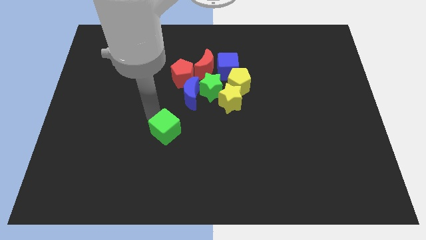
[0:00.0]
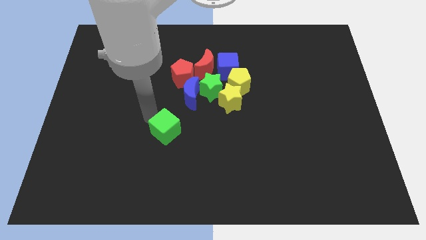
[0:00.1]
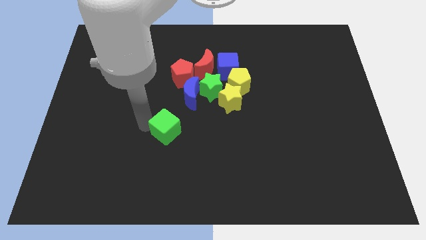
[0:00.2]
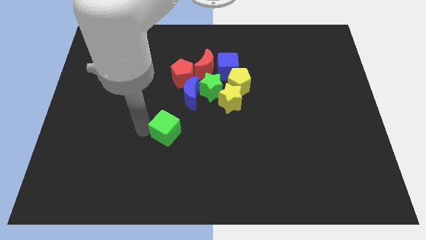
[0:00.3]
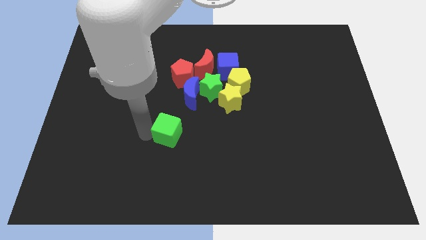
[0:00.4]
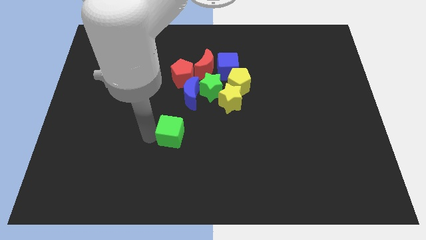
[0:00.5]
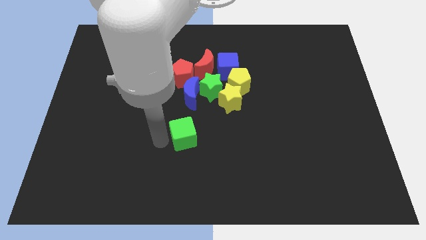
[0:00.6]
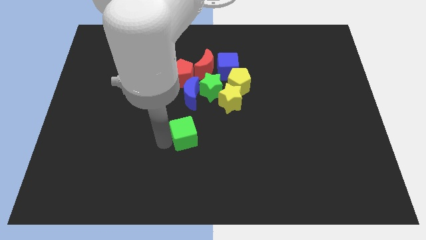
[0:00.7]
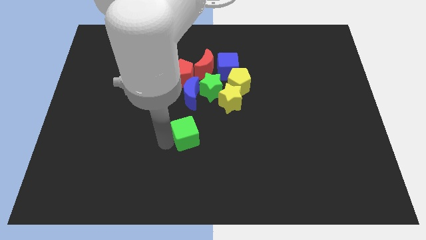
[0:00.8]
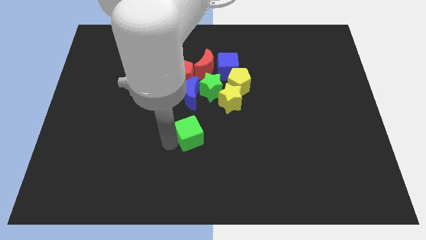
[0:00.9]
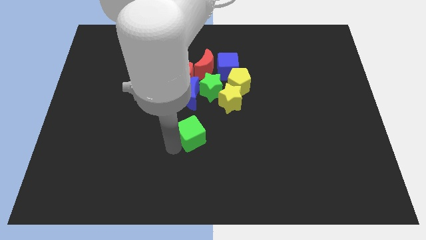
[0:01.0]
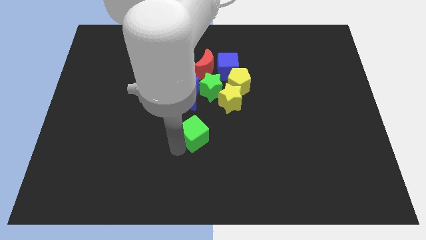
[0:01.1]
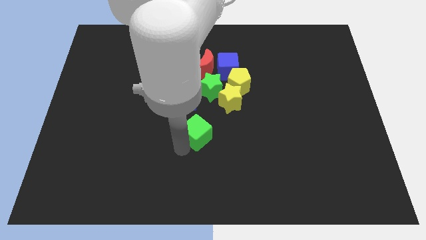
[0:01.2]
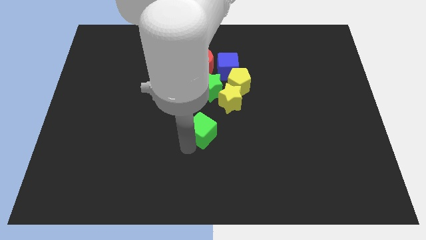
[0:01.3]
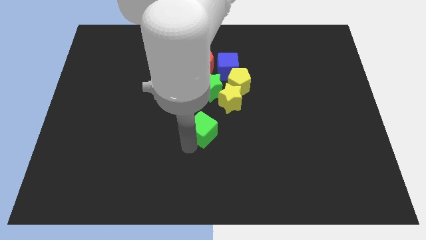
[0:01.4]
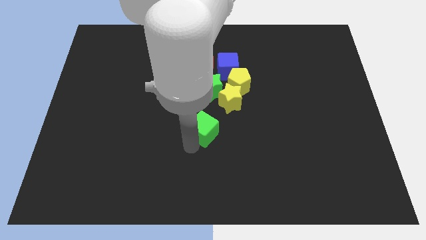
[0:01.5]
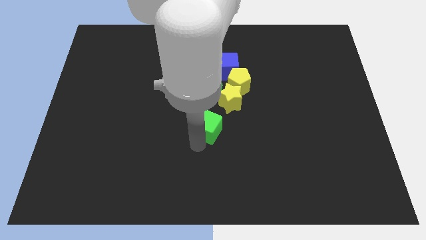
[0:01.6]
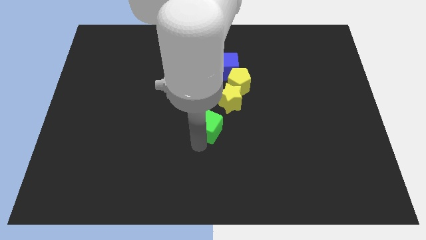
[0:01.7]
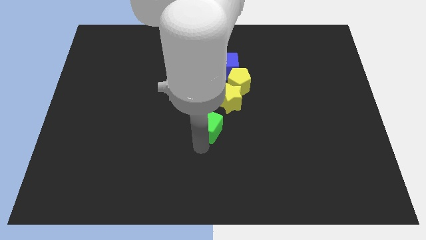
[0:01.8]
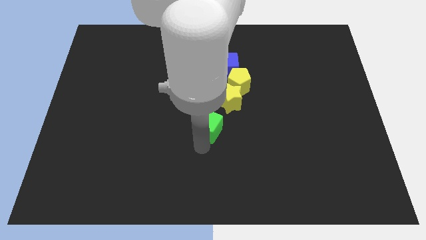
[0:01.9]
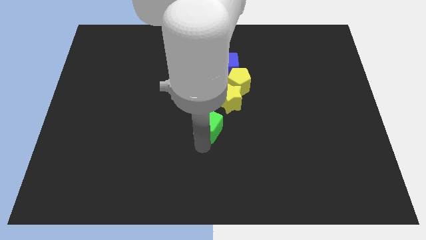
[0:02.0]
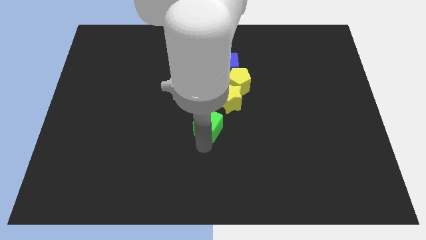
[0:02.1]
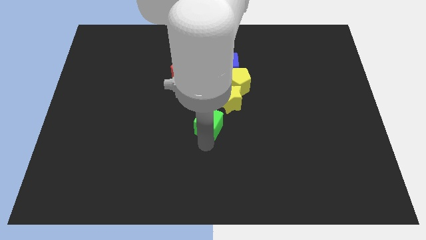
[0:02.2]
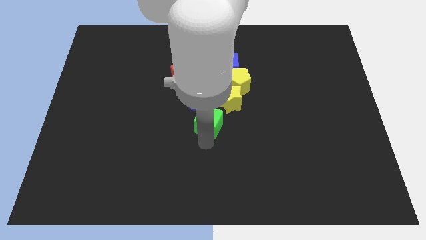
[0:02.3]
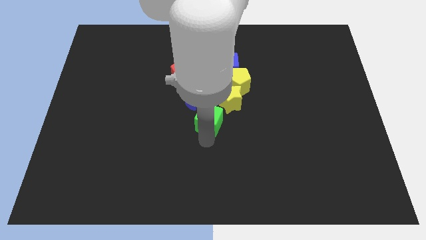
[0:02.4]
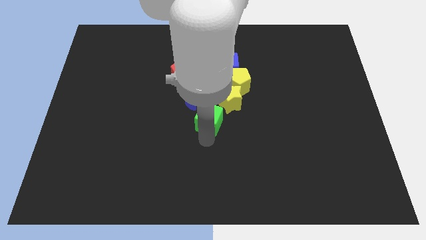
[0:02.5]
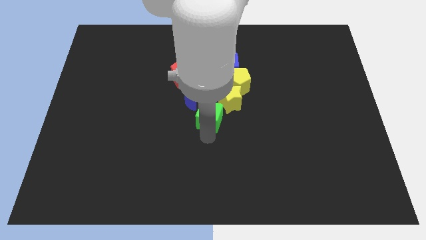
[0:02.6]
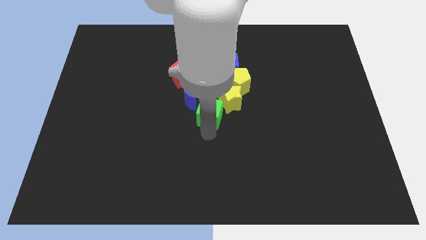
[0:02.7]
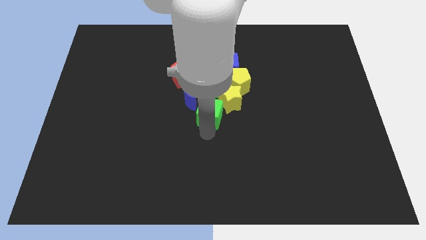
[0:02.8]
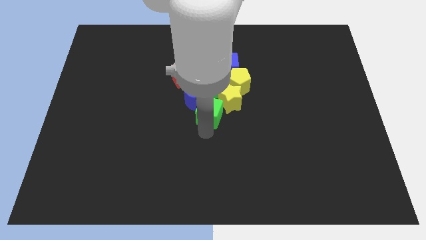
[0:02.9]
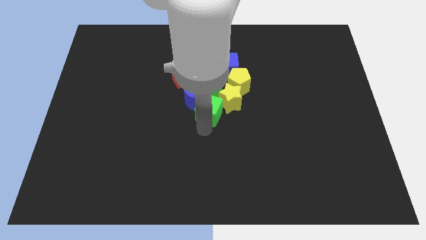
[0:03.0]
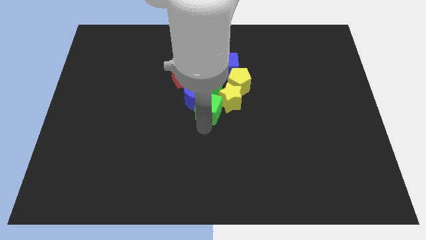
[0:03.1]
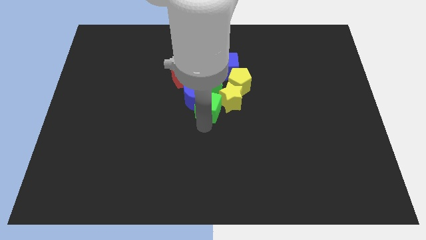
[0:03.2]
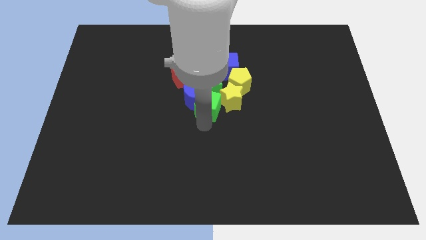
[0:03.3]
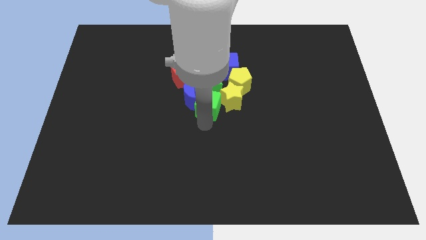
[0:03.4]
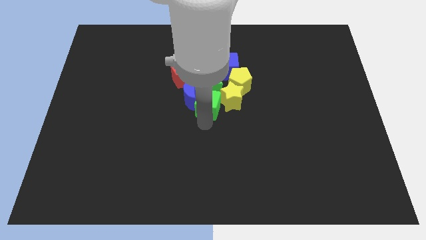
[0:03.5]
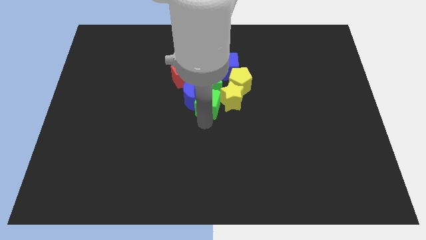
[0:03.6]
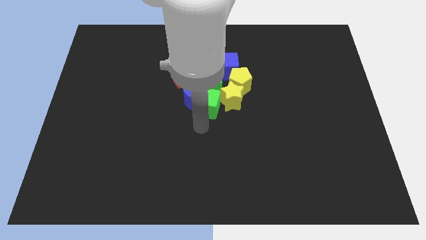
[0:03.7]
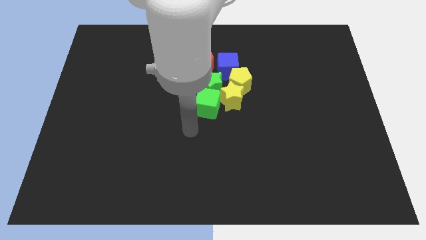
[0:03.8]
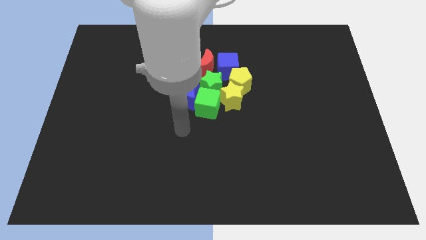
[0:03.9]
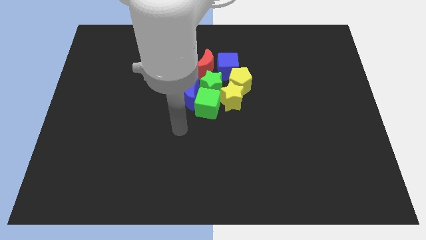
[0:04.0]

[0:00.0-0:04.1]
drag the green cube to the group of blocks

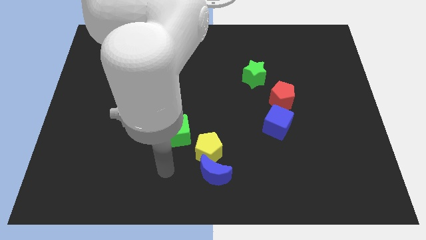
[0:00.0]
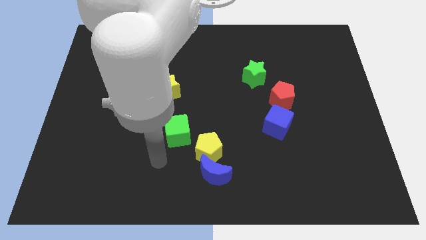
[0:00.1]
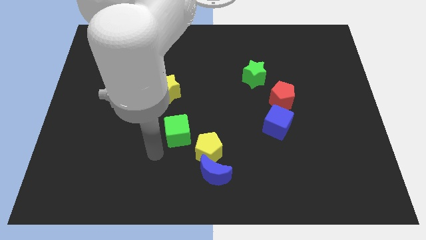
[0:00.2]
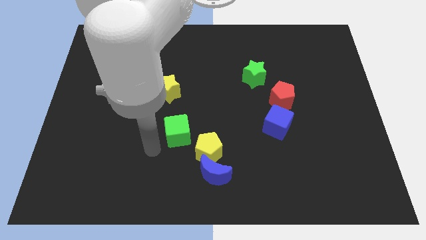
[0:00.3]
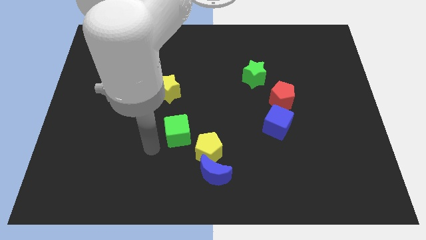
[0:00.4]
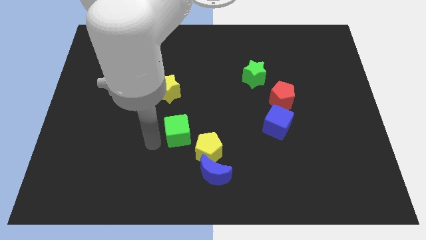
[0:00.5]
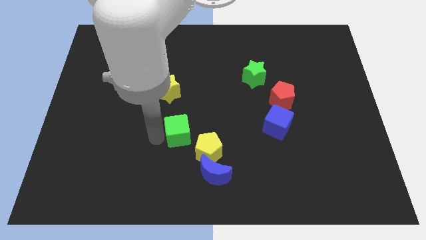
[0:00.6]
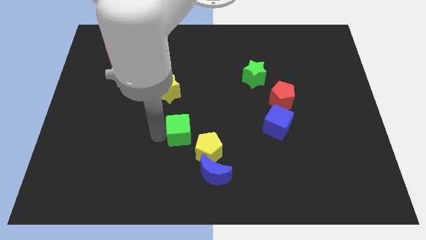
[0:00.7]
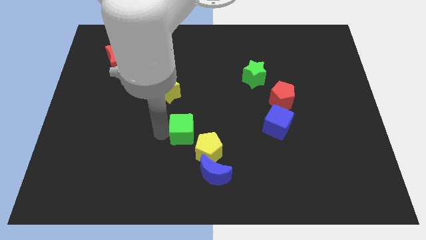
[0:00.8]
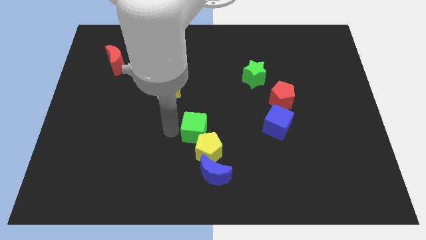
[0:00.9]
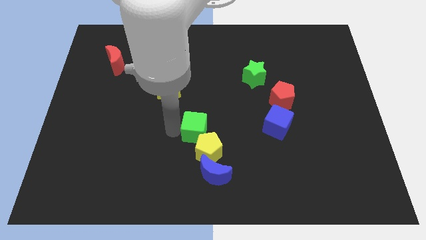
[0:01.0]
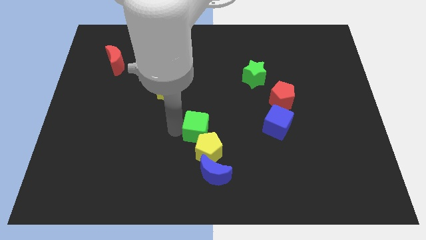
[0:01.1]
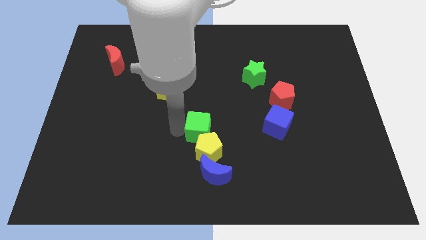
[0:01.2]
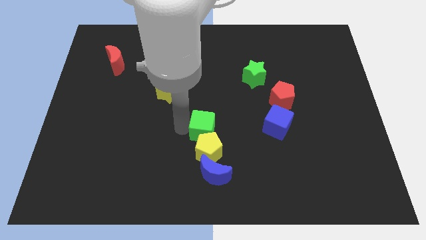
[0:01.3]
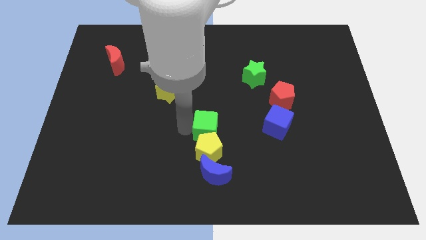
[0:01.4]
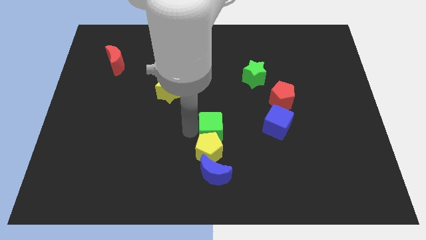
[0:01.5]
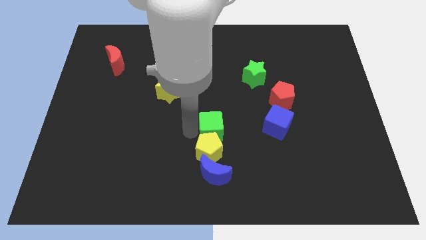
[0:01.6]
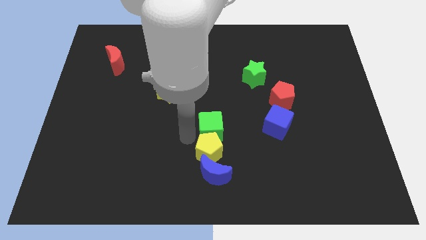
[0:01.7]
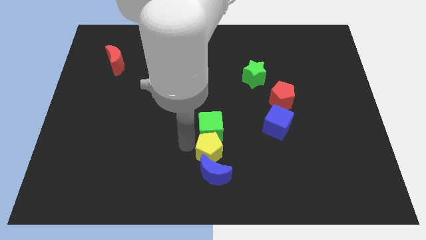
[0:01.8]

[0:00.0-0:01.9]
put the green cube above the yellow pentagon

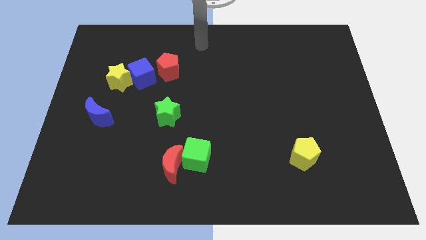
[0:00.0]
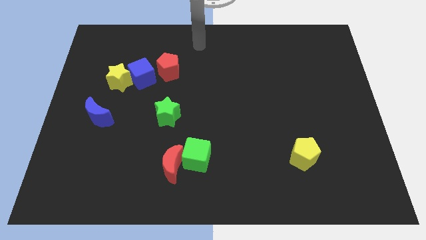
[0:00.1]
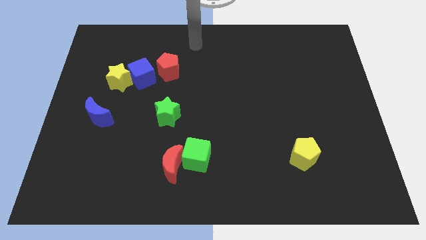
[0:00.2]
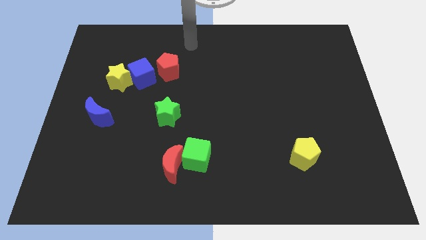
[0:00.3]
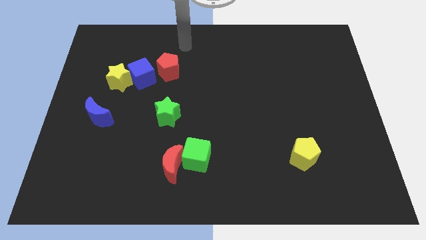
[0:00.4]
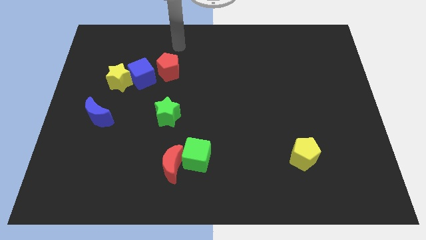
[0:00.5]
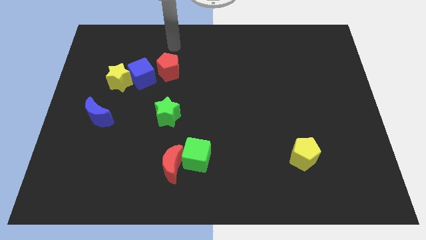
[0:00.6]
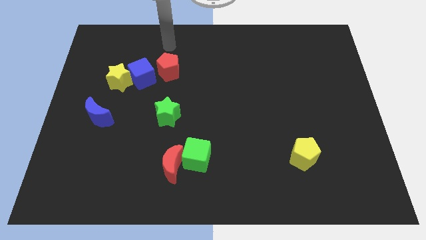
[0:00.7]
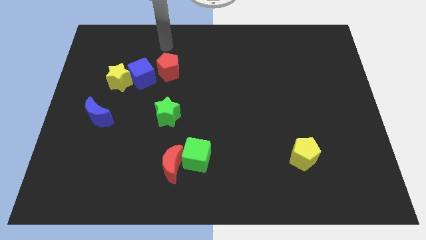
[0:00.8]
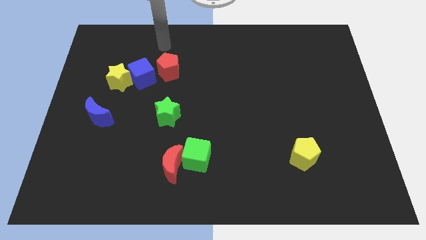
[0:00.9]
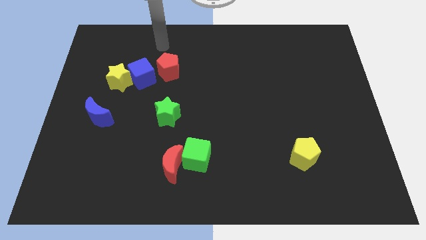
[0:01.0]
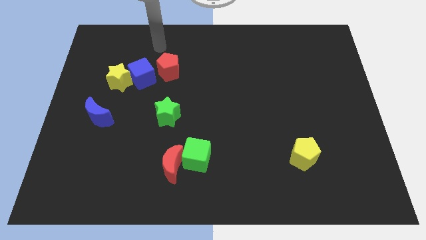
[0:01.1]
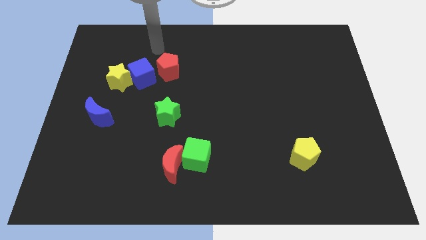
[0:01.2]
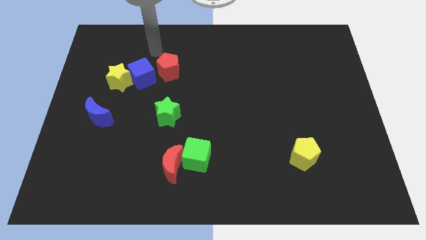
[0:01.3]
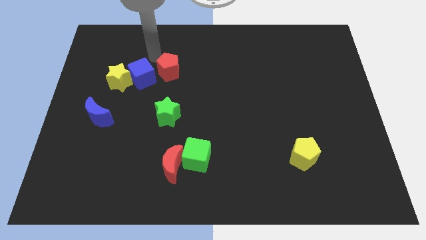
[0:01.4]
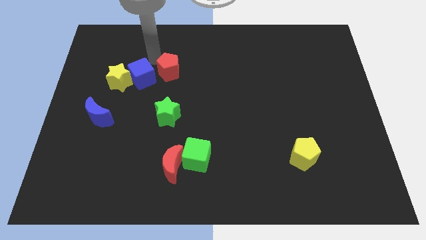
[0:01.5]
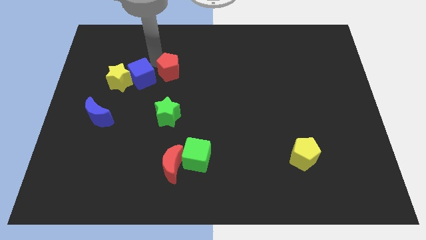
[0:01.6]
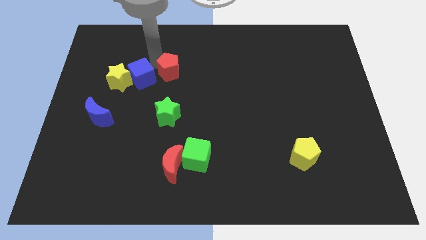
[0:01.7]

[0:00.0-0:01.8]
touch the top left of the red pentagon

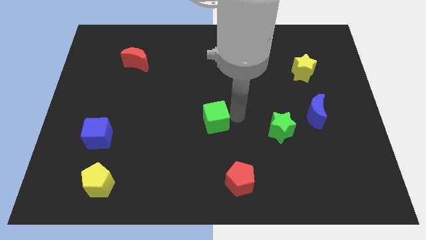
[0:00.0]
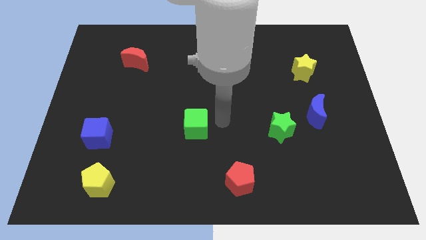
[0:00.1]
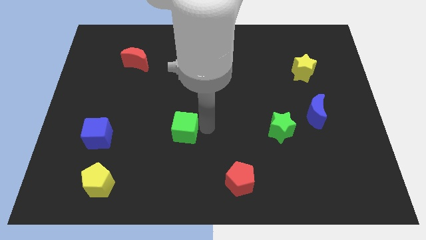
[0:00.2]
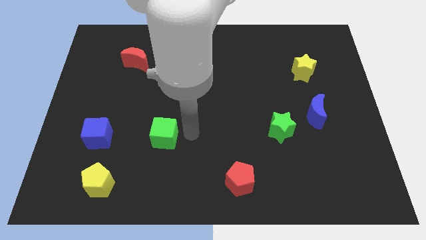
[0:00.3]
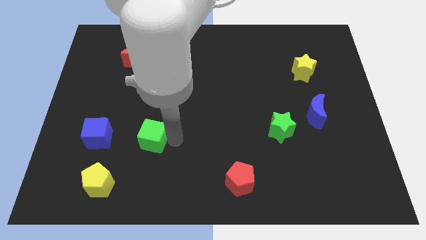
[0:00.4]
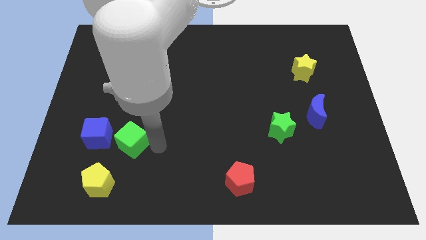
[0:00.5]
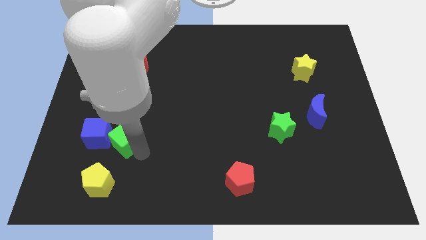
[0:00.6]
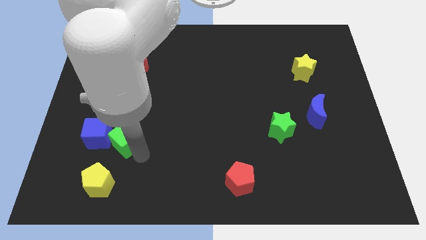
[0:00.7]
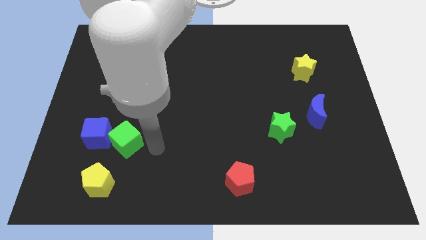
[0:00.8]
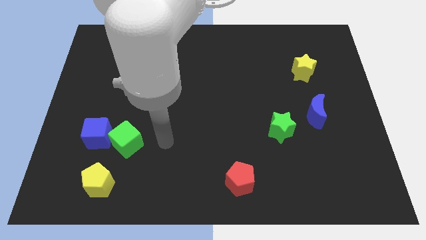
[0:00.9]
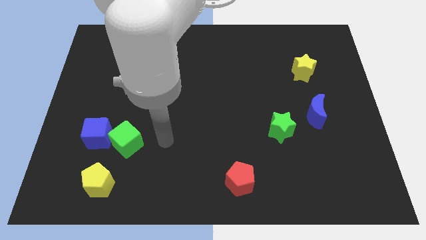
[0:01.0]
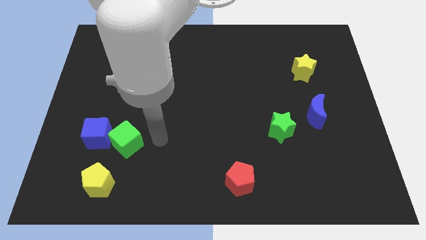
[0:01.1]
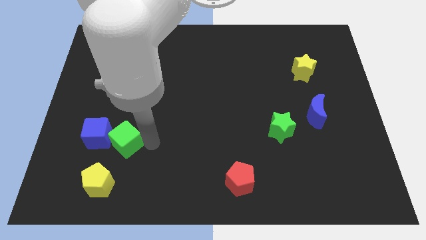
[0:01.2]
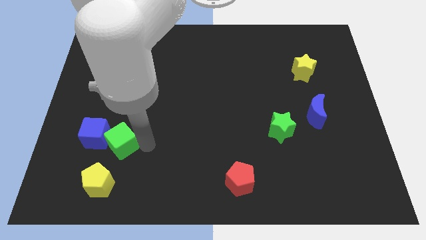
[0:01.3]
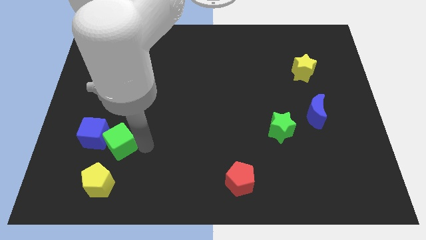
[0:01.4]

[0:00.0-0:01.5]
move the green cube to the right side of the blue cube
